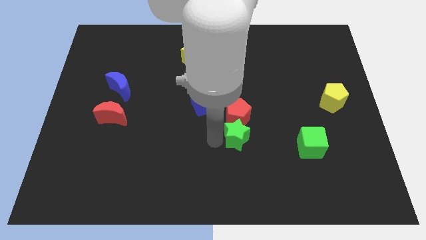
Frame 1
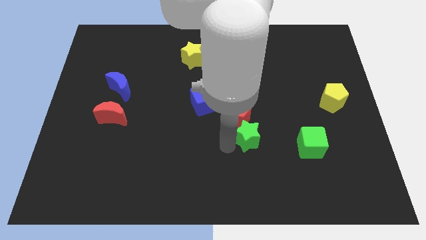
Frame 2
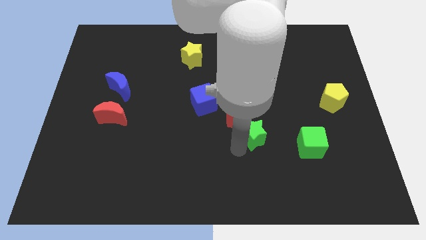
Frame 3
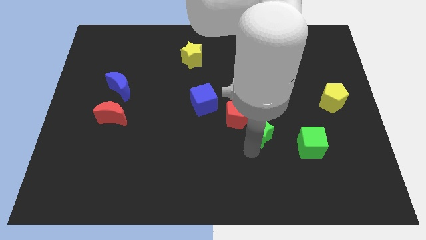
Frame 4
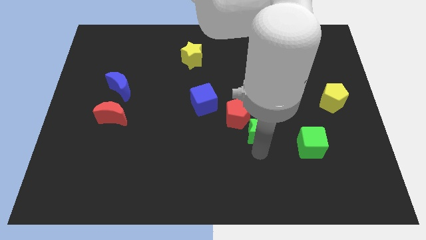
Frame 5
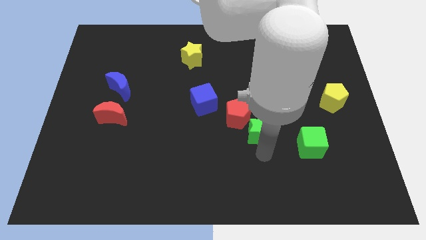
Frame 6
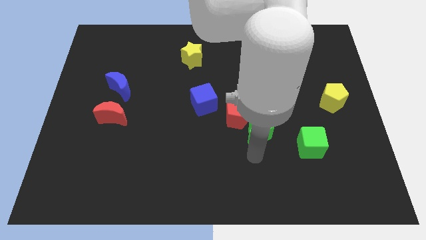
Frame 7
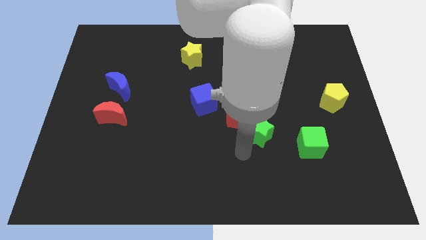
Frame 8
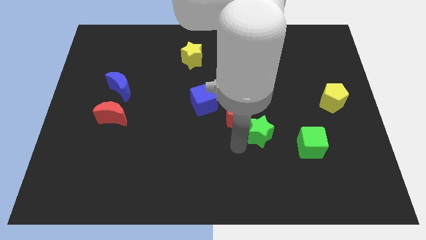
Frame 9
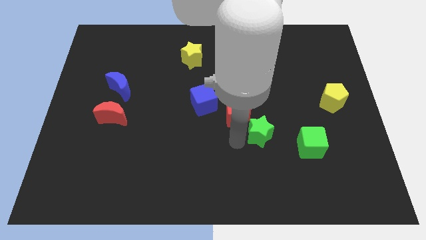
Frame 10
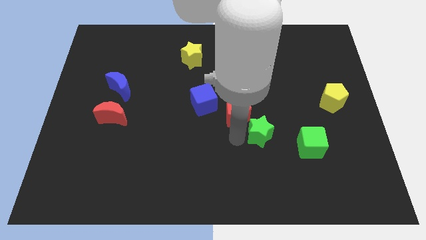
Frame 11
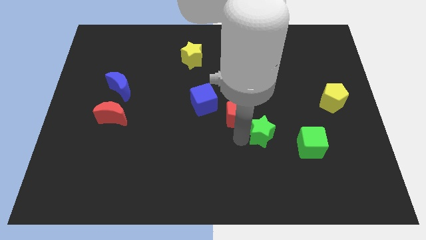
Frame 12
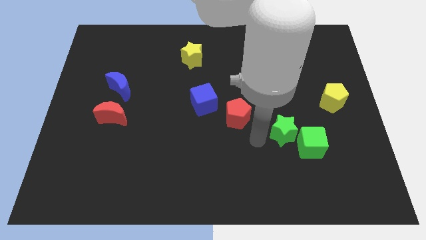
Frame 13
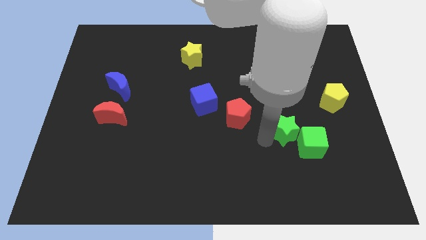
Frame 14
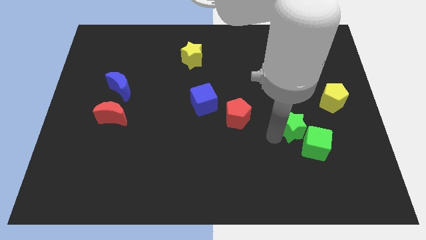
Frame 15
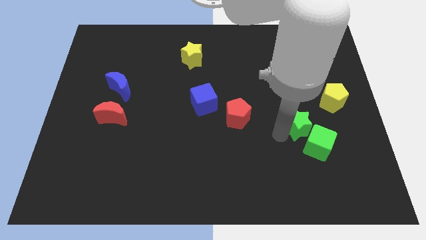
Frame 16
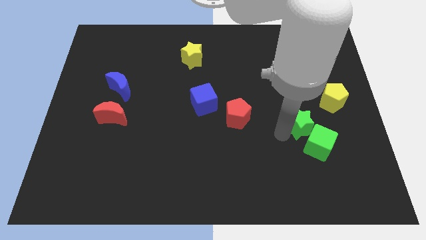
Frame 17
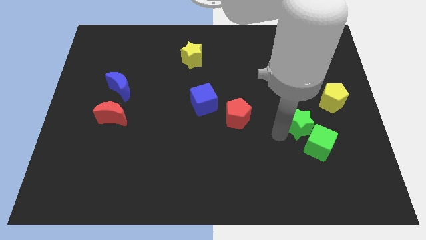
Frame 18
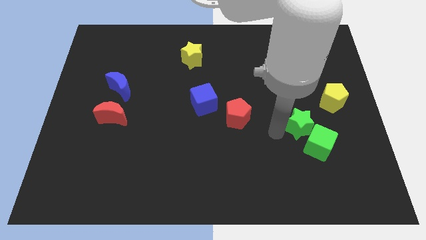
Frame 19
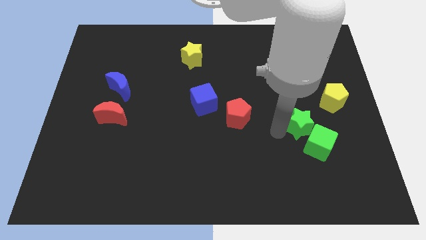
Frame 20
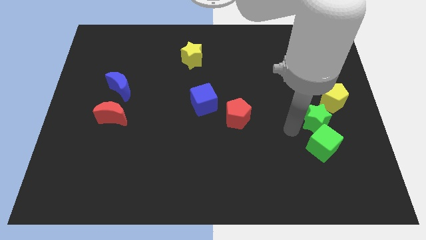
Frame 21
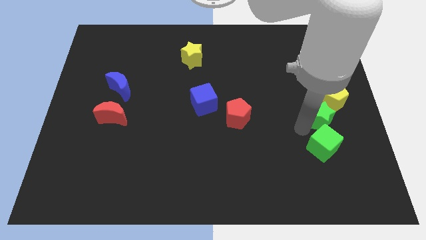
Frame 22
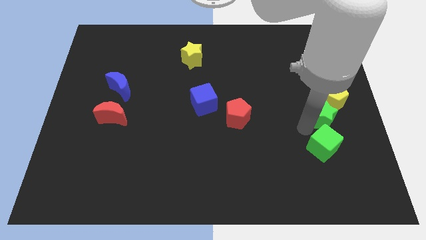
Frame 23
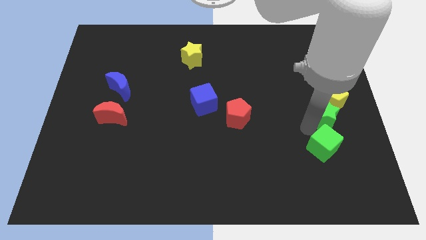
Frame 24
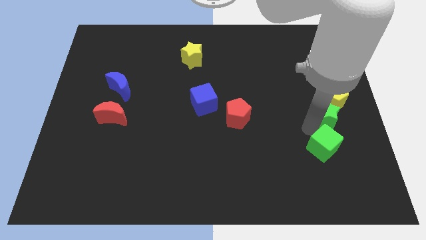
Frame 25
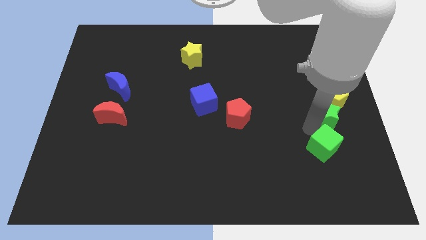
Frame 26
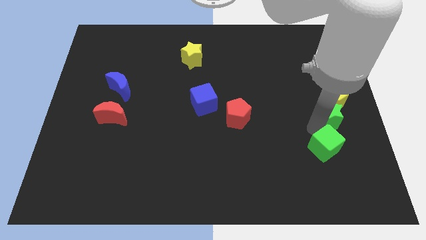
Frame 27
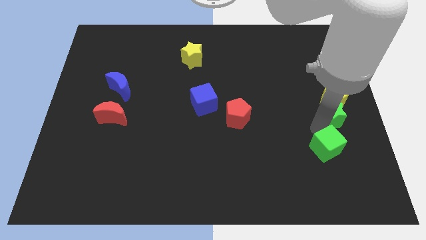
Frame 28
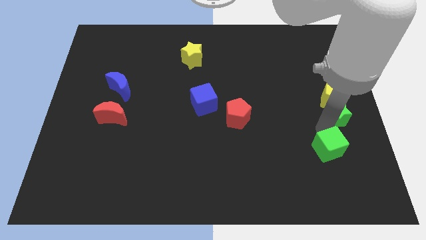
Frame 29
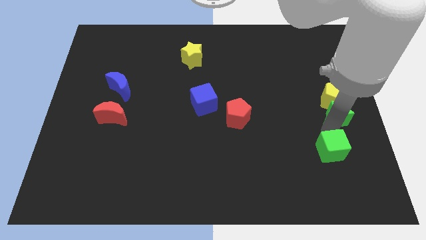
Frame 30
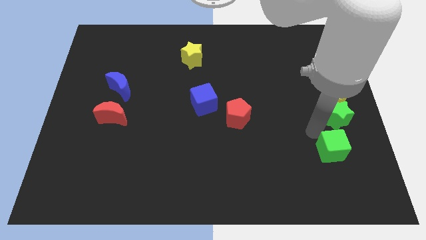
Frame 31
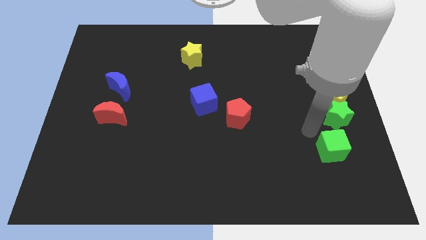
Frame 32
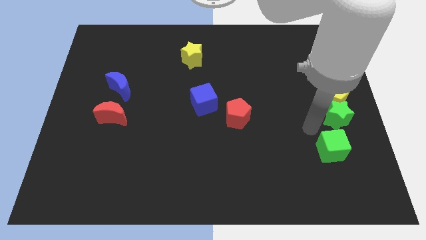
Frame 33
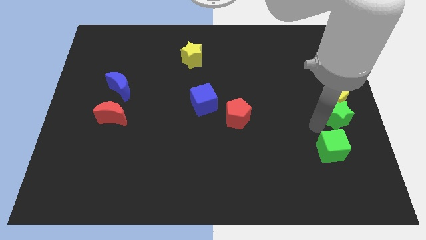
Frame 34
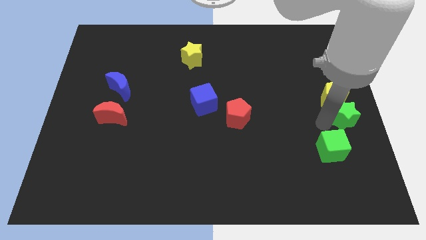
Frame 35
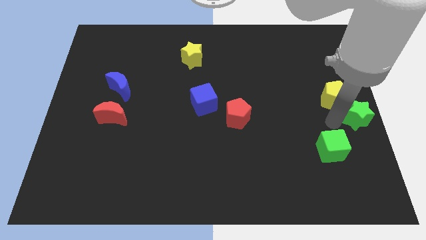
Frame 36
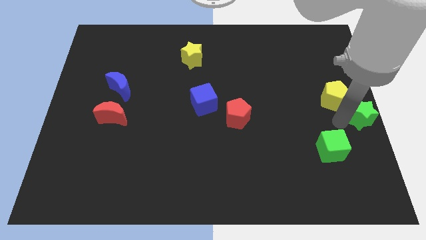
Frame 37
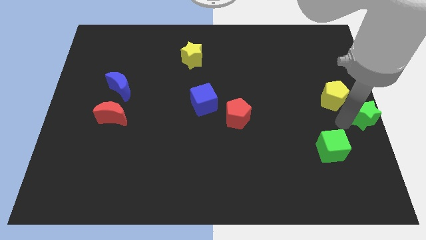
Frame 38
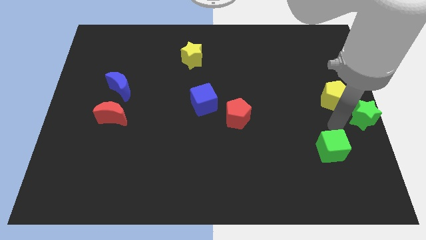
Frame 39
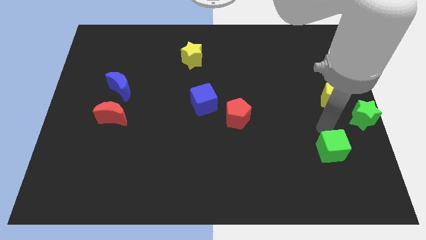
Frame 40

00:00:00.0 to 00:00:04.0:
put the green star at the center right side of the board

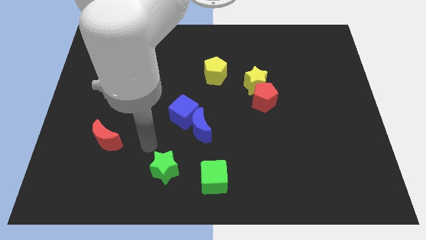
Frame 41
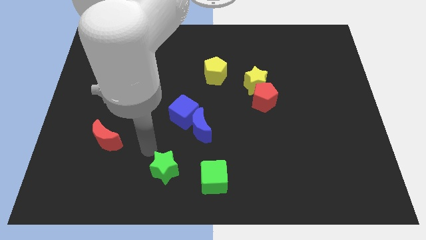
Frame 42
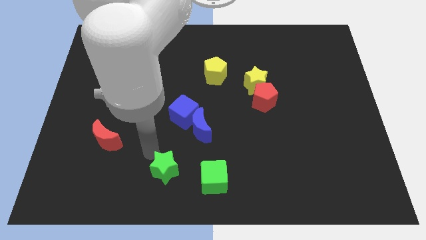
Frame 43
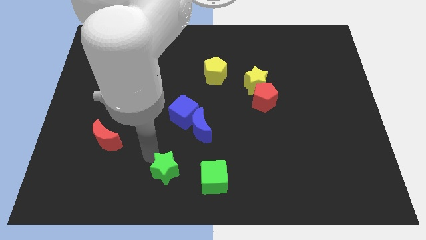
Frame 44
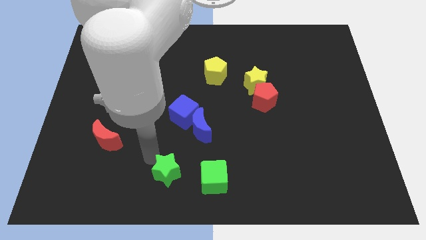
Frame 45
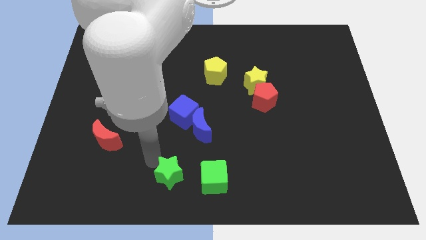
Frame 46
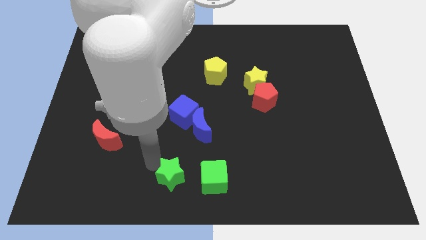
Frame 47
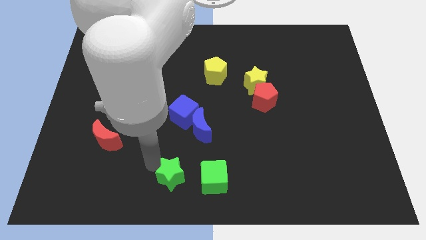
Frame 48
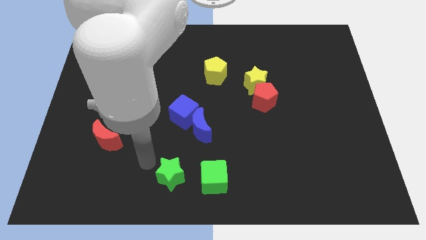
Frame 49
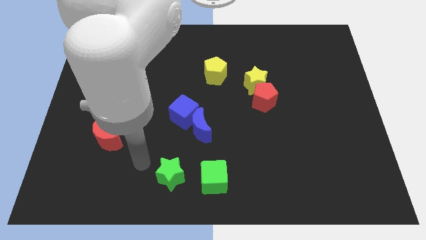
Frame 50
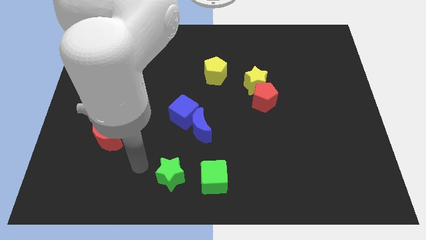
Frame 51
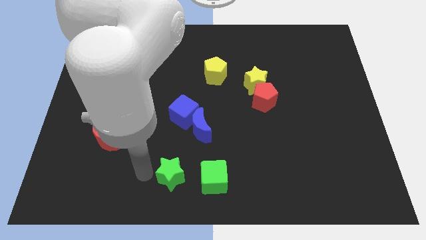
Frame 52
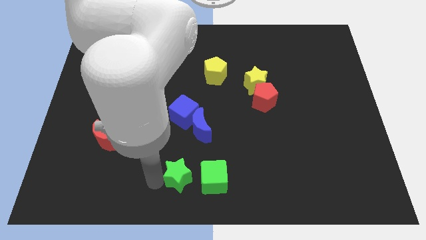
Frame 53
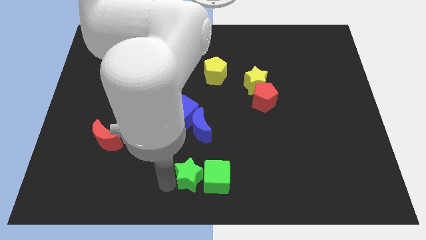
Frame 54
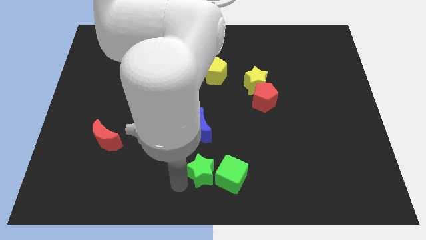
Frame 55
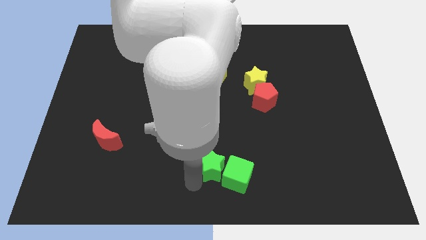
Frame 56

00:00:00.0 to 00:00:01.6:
separate the green star into the green cube

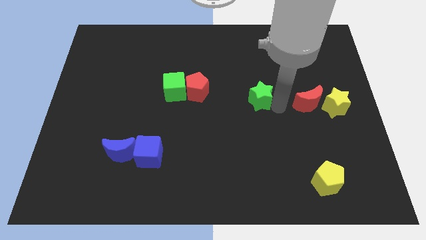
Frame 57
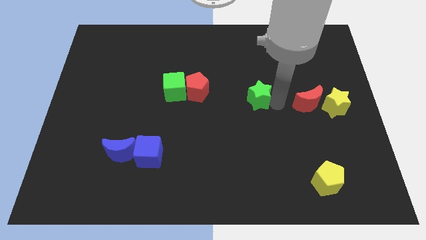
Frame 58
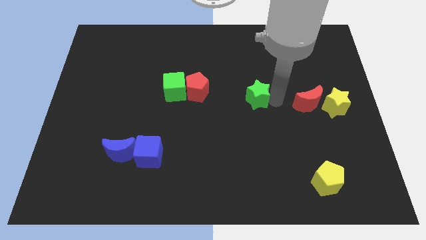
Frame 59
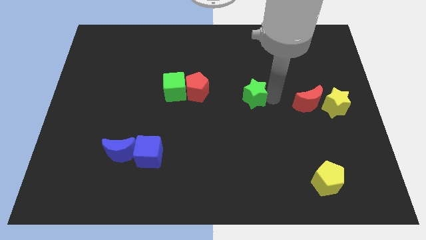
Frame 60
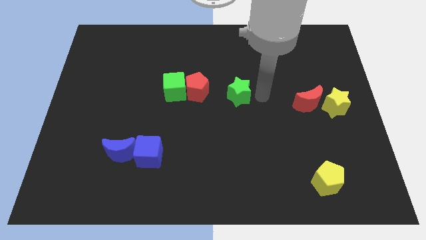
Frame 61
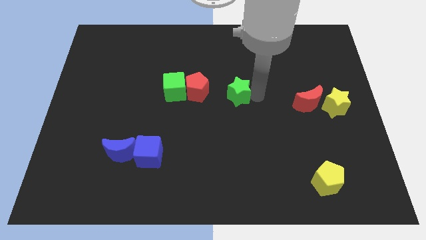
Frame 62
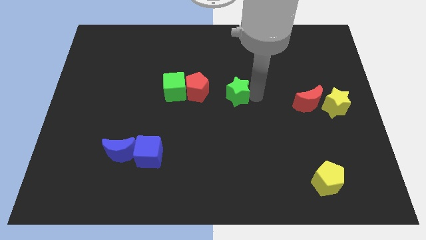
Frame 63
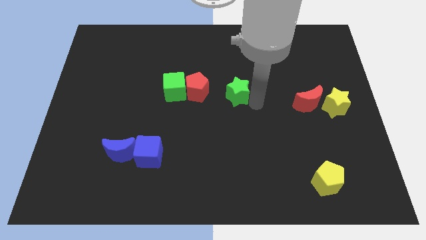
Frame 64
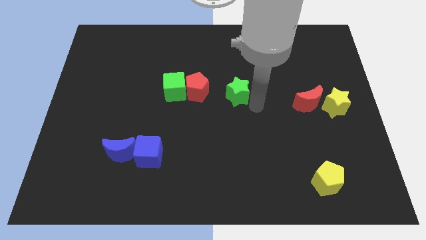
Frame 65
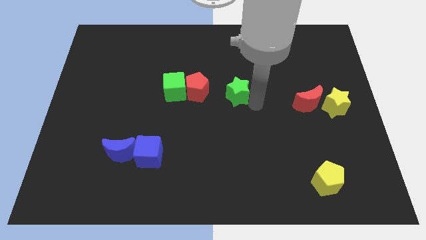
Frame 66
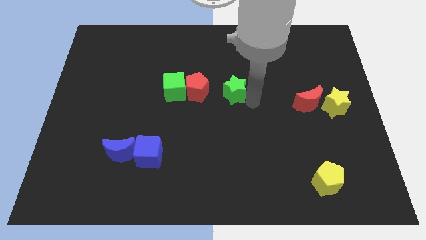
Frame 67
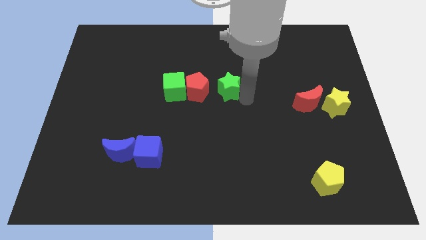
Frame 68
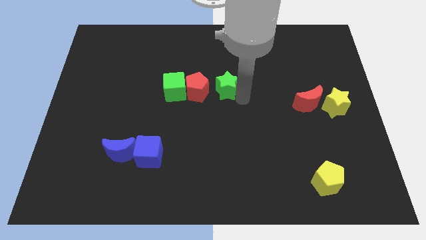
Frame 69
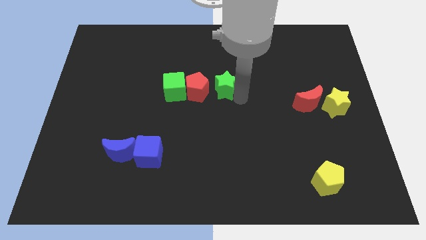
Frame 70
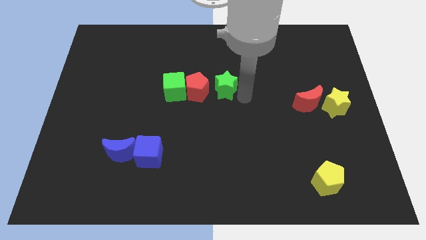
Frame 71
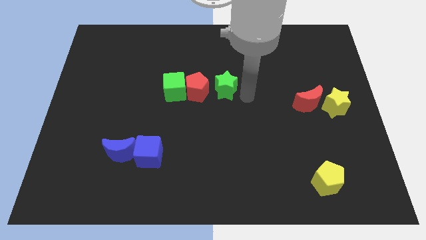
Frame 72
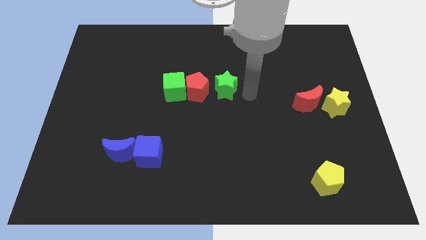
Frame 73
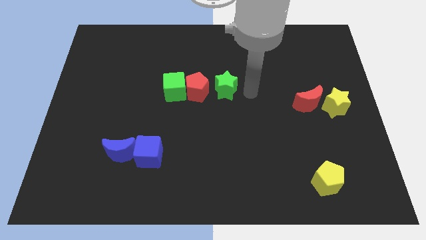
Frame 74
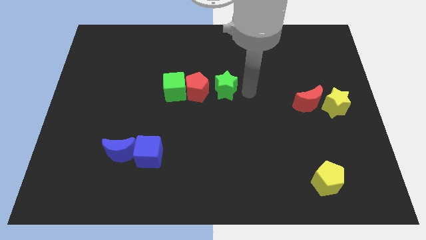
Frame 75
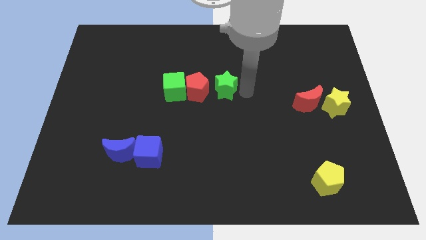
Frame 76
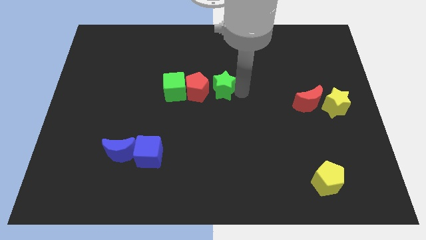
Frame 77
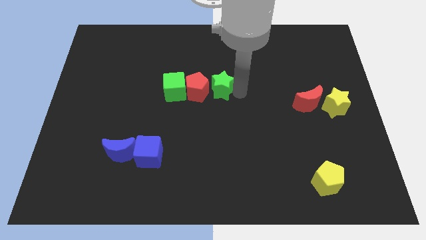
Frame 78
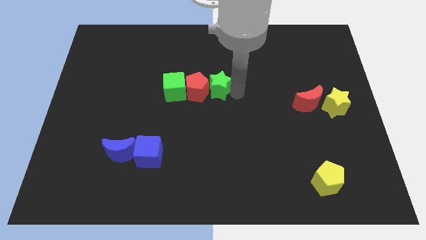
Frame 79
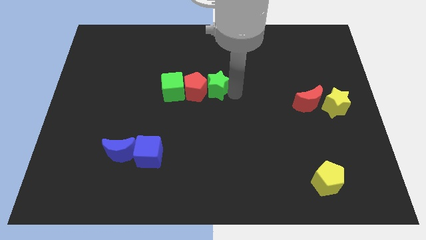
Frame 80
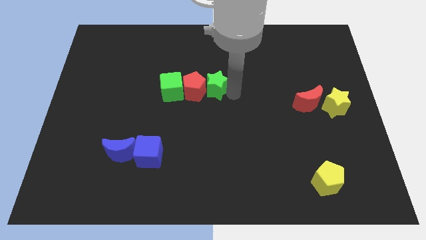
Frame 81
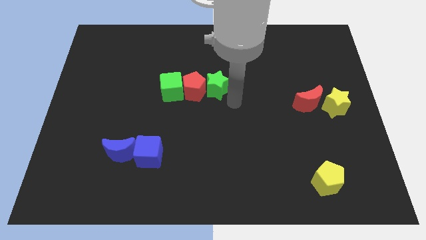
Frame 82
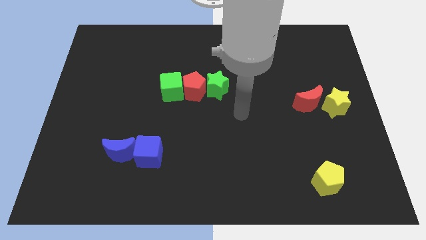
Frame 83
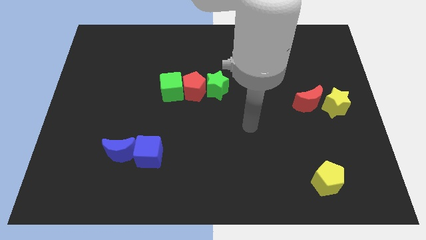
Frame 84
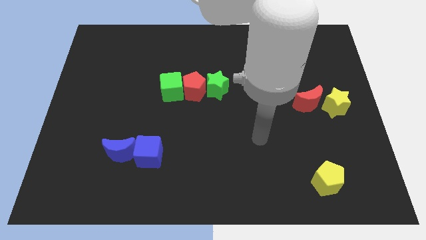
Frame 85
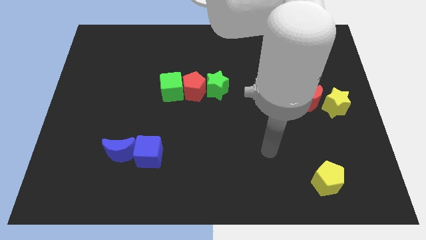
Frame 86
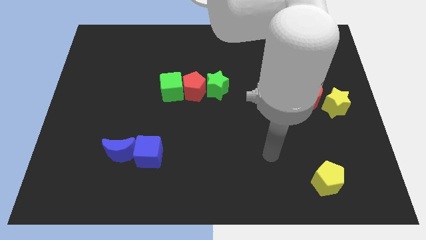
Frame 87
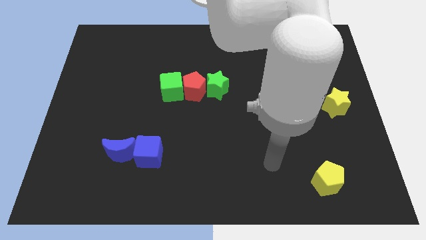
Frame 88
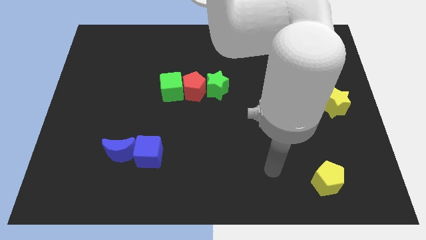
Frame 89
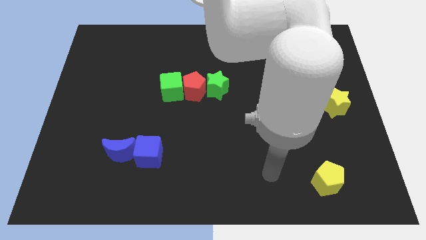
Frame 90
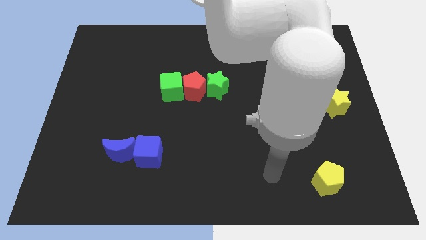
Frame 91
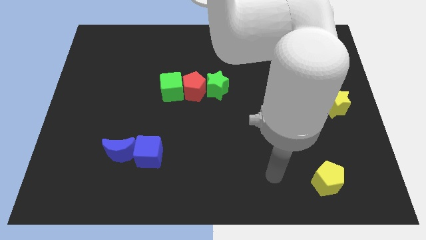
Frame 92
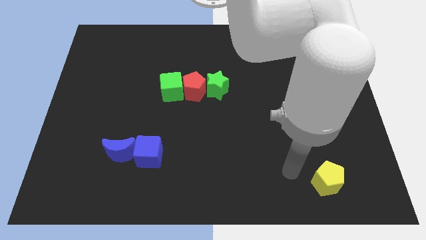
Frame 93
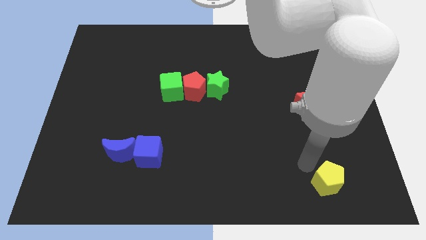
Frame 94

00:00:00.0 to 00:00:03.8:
push the green star right to the red pentagon
